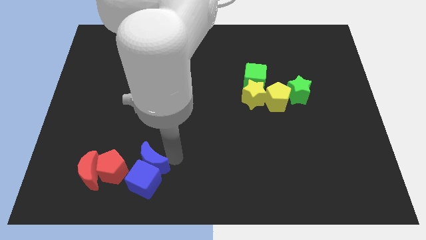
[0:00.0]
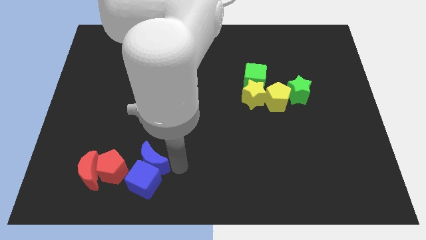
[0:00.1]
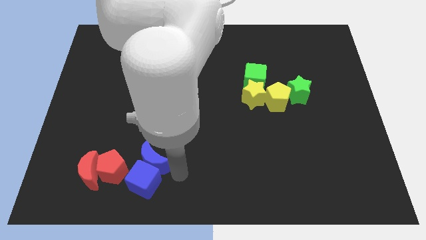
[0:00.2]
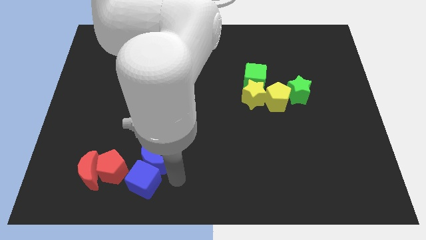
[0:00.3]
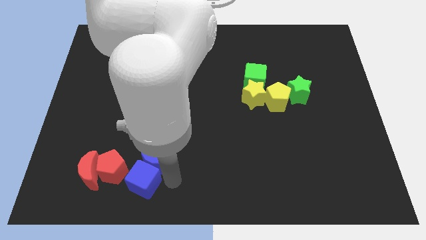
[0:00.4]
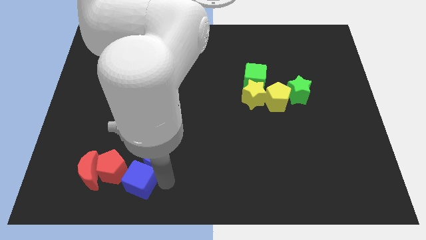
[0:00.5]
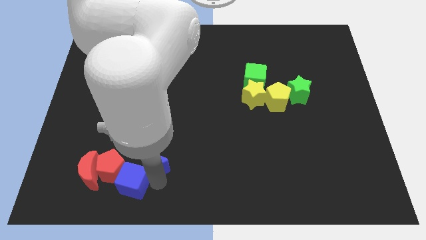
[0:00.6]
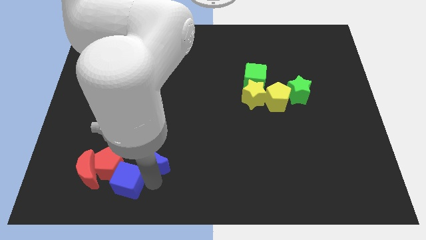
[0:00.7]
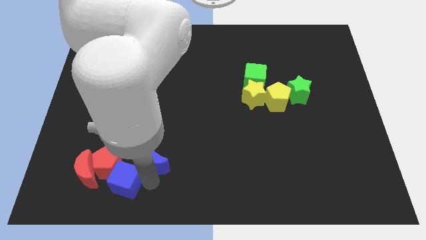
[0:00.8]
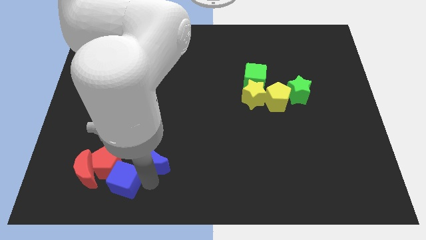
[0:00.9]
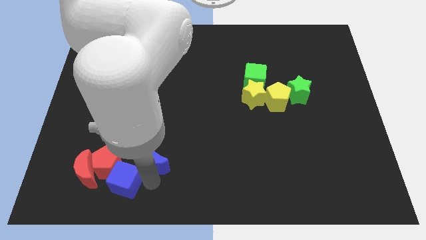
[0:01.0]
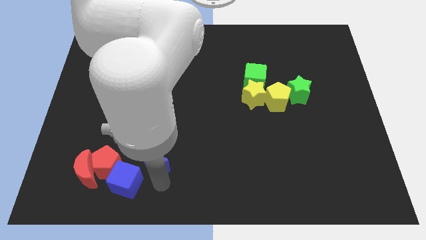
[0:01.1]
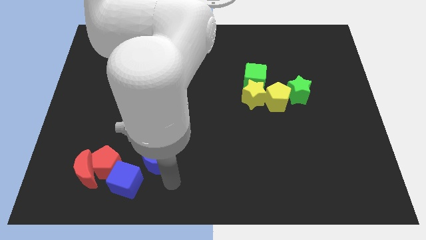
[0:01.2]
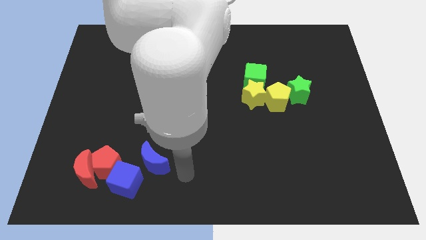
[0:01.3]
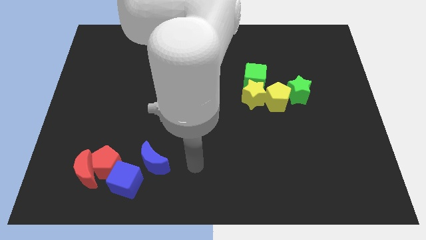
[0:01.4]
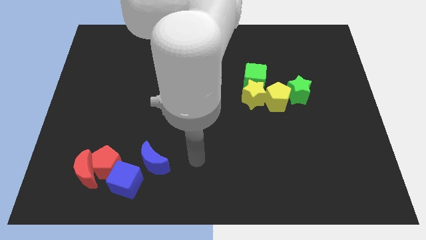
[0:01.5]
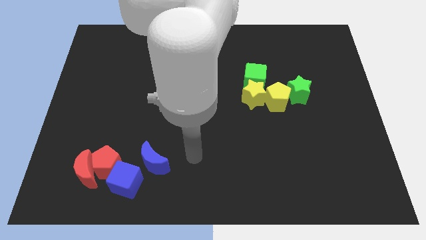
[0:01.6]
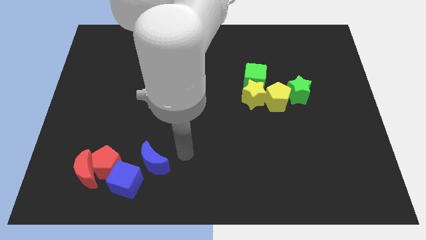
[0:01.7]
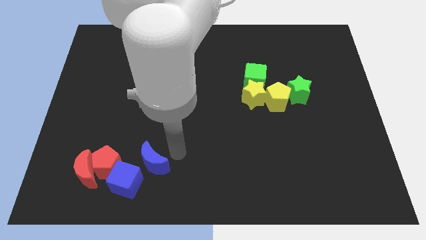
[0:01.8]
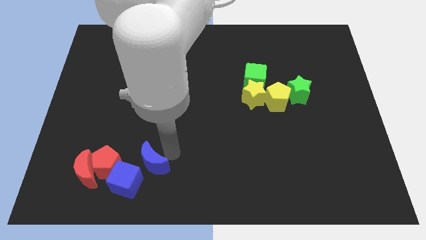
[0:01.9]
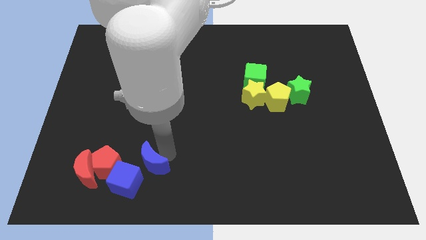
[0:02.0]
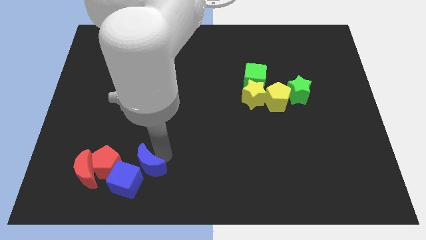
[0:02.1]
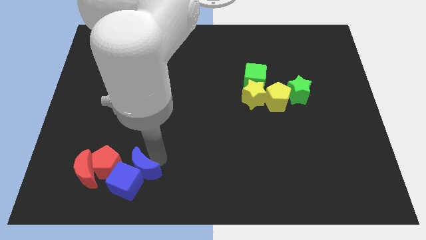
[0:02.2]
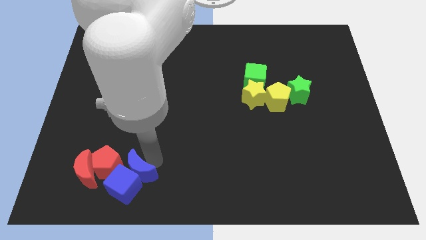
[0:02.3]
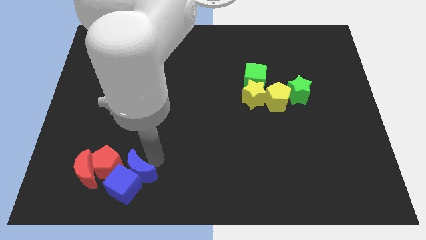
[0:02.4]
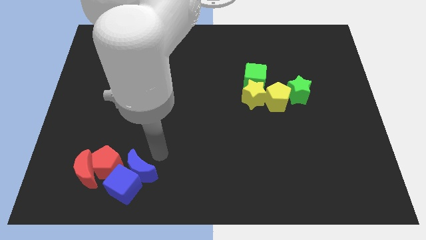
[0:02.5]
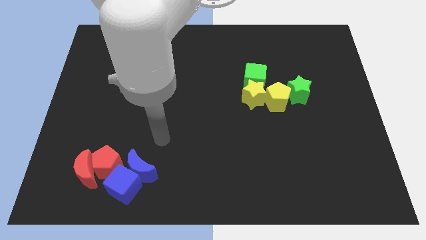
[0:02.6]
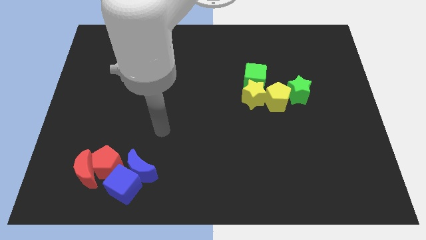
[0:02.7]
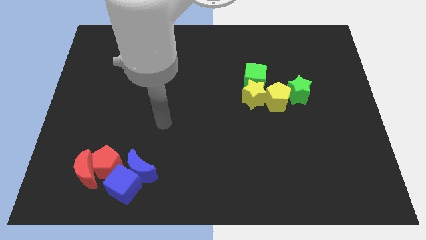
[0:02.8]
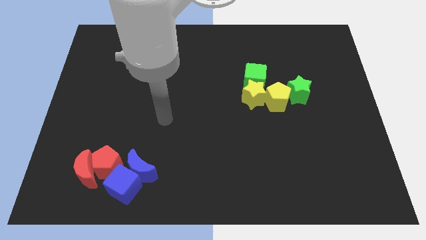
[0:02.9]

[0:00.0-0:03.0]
slide the blue blocks into the red blocks

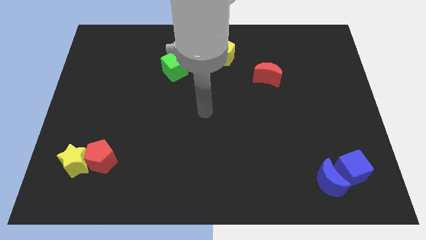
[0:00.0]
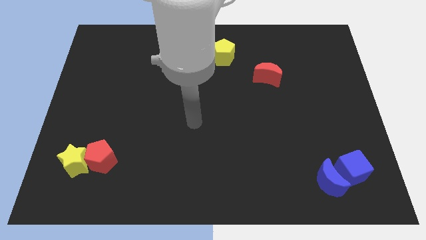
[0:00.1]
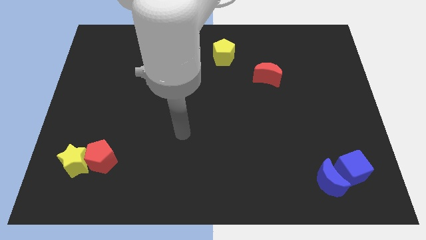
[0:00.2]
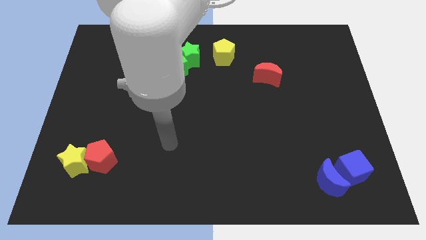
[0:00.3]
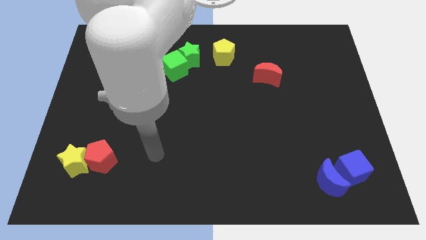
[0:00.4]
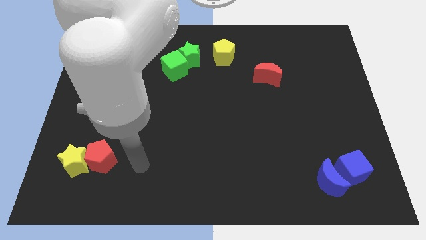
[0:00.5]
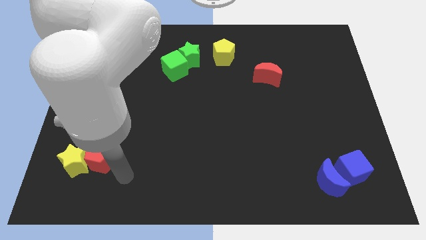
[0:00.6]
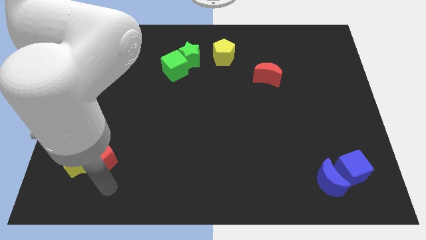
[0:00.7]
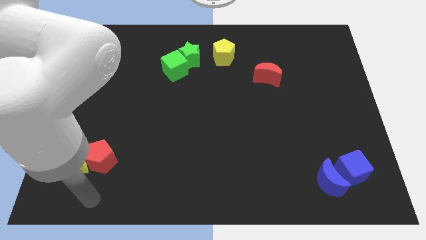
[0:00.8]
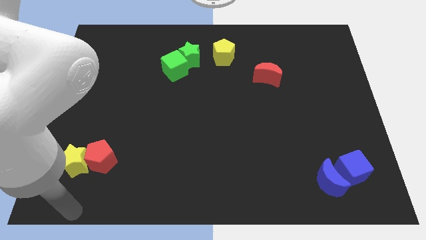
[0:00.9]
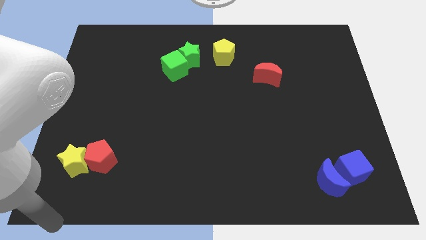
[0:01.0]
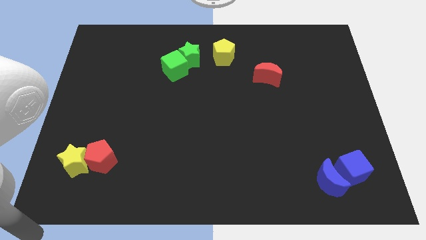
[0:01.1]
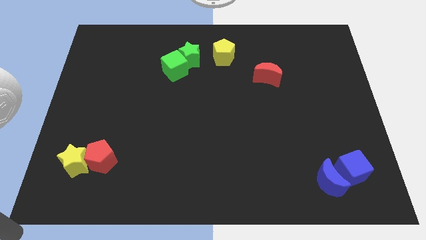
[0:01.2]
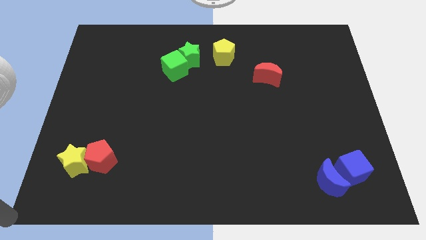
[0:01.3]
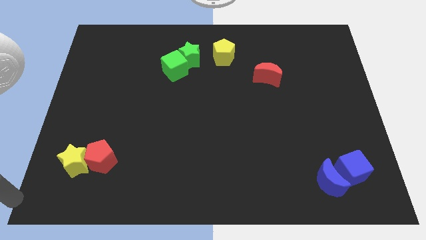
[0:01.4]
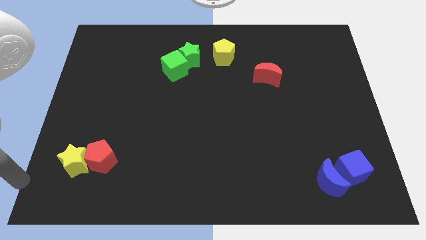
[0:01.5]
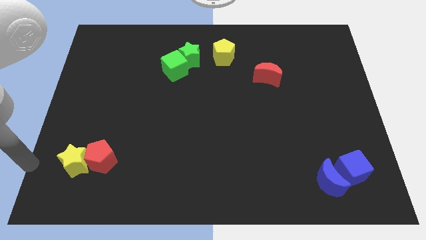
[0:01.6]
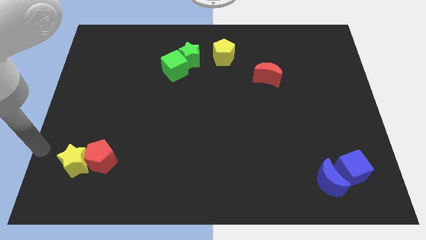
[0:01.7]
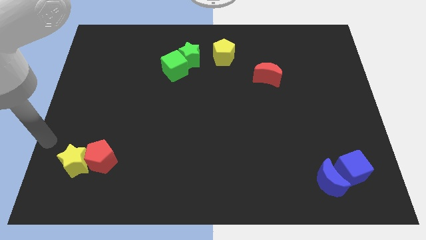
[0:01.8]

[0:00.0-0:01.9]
point your arm towards yellow star

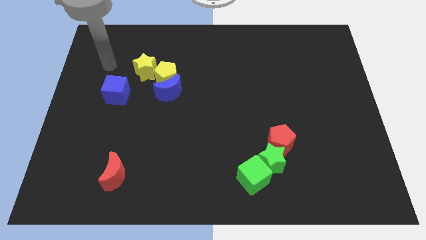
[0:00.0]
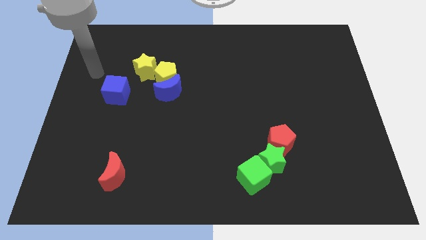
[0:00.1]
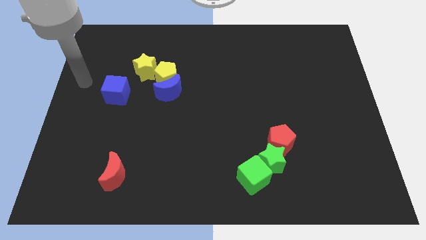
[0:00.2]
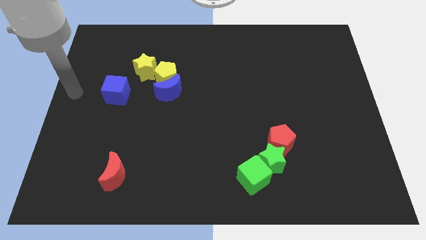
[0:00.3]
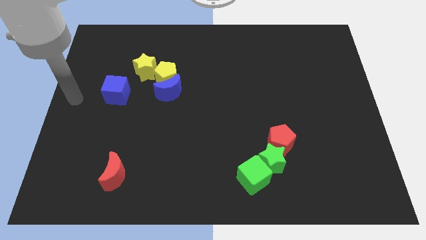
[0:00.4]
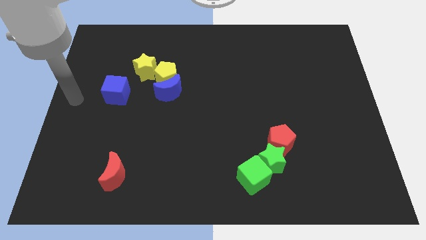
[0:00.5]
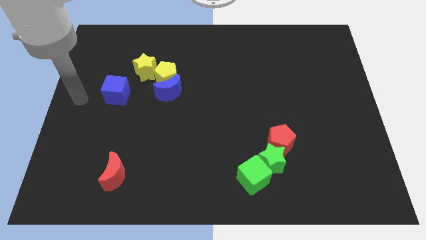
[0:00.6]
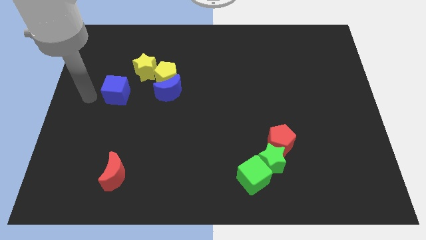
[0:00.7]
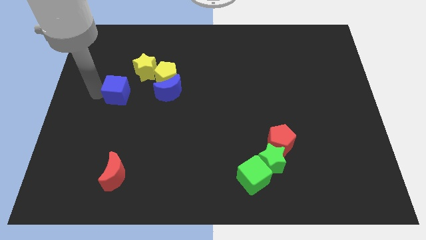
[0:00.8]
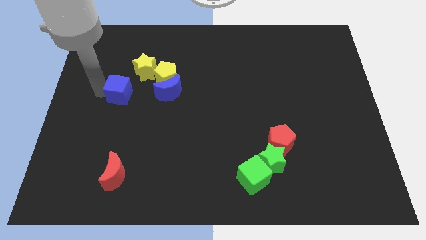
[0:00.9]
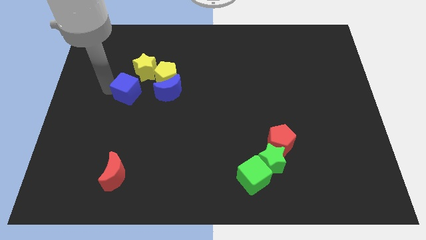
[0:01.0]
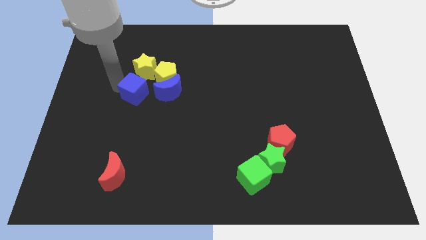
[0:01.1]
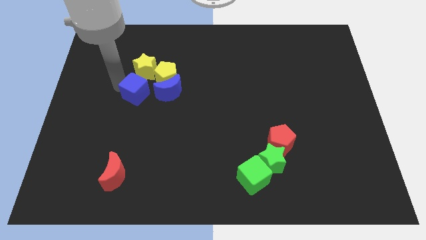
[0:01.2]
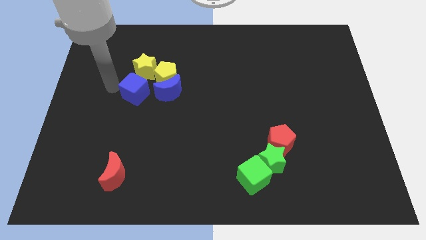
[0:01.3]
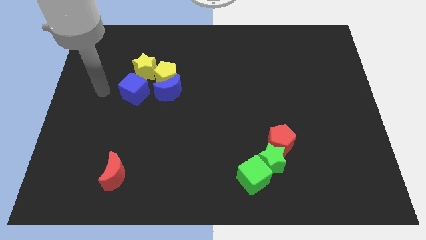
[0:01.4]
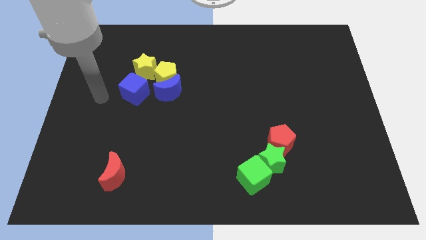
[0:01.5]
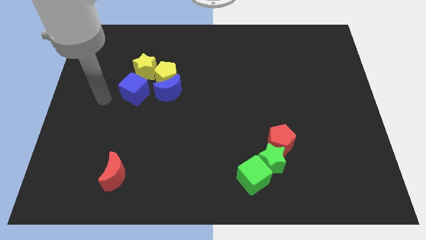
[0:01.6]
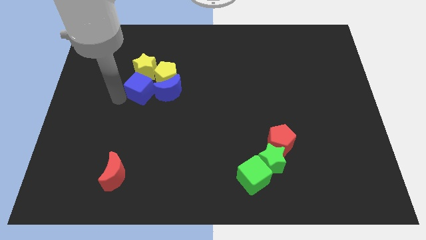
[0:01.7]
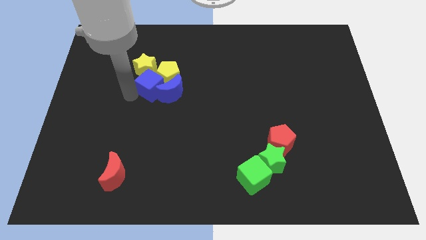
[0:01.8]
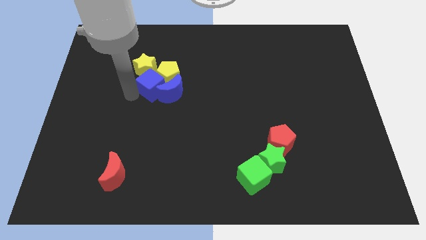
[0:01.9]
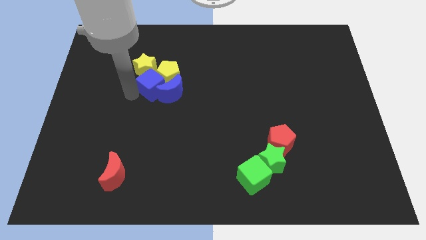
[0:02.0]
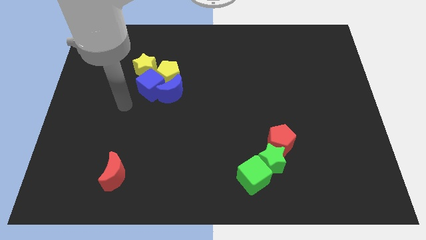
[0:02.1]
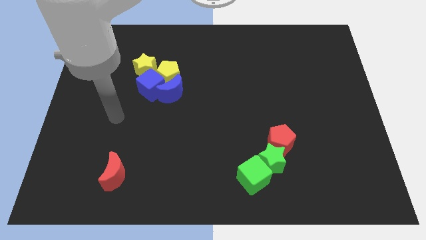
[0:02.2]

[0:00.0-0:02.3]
push the blue cube into the group of yellow blocks and blue moon

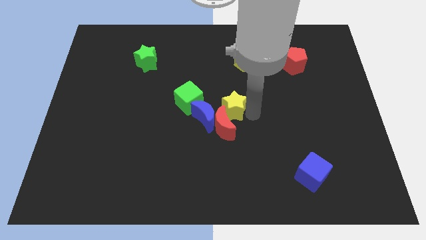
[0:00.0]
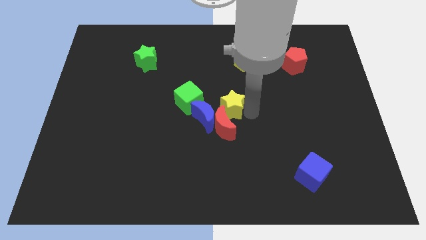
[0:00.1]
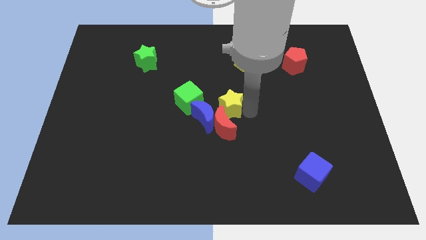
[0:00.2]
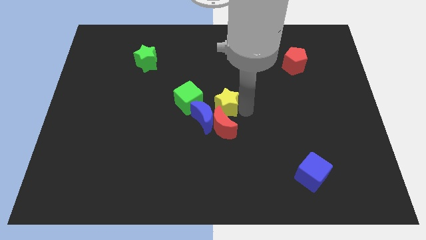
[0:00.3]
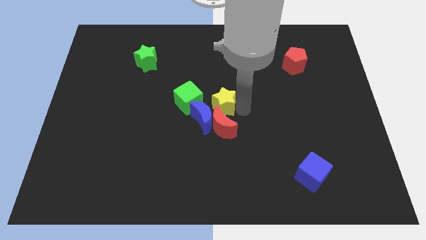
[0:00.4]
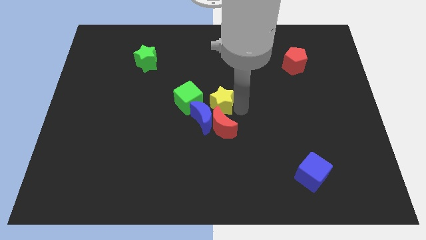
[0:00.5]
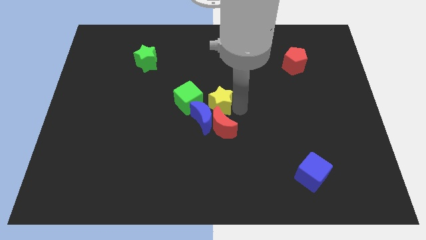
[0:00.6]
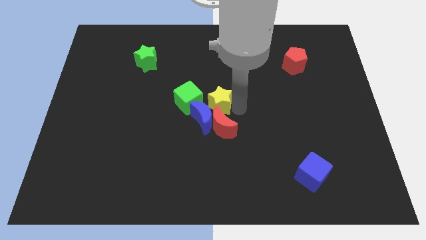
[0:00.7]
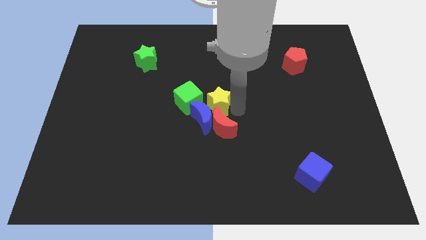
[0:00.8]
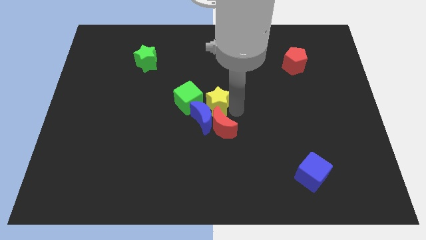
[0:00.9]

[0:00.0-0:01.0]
place the yellow star right to the blue moon

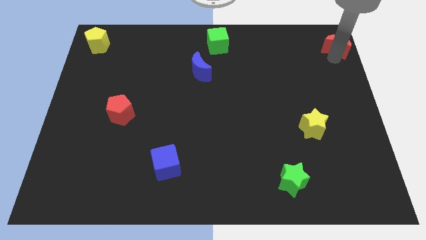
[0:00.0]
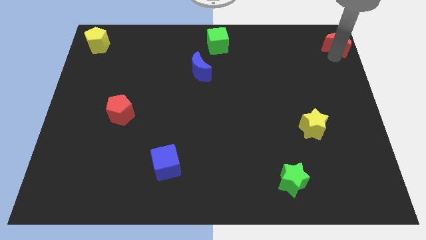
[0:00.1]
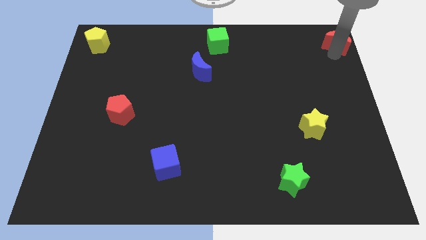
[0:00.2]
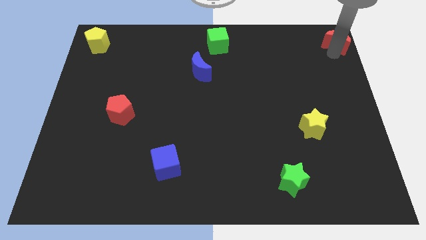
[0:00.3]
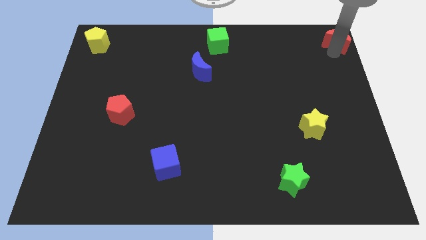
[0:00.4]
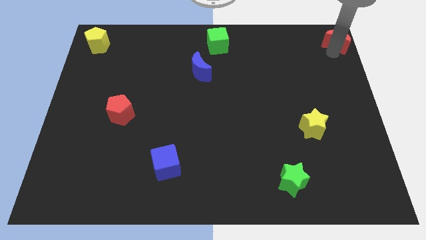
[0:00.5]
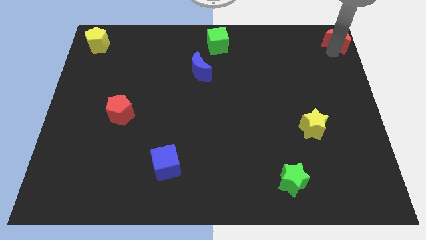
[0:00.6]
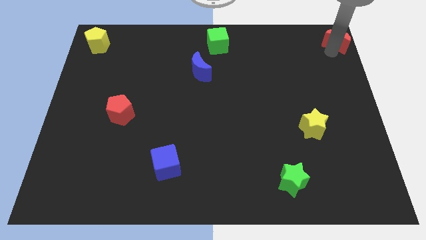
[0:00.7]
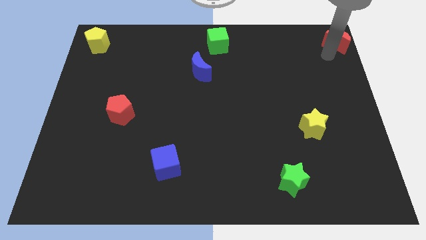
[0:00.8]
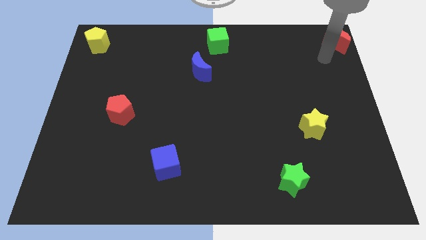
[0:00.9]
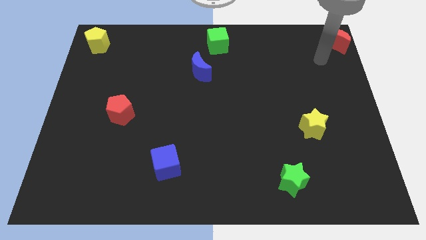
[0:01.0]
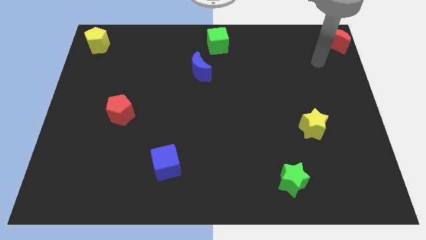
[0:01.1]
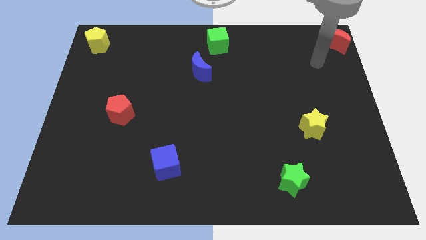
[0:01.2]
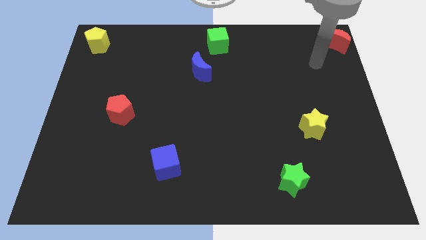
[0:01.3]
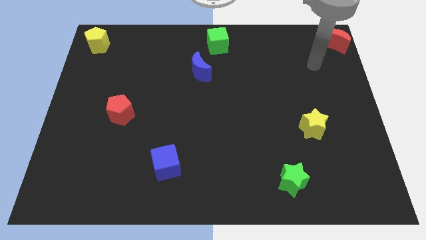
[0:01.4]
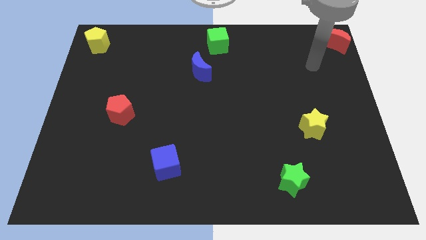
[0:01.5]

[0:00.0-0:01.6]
move the red crescent to the top right corner of the board
